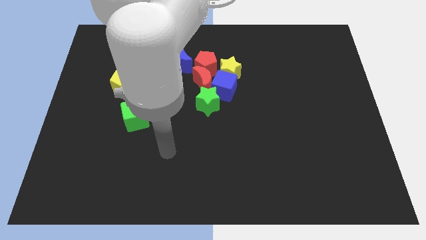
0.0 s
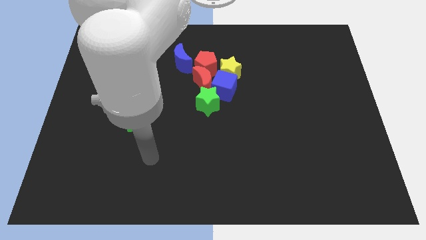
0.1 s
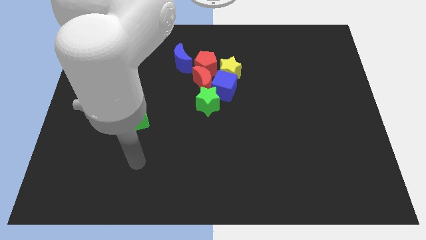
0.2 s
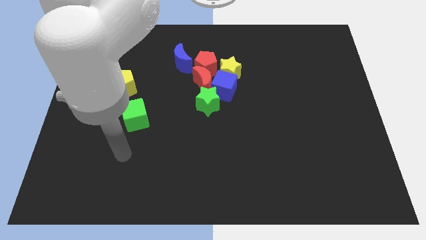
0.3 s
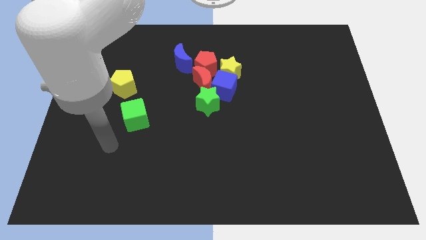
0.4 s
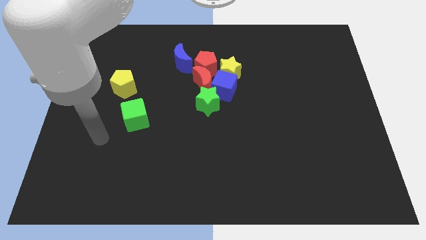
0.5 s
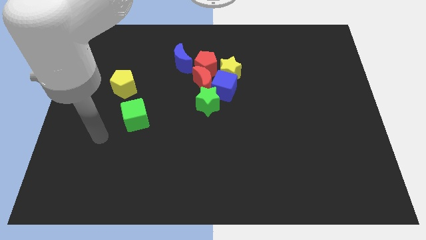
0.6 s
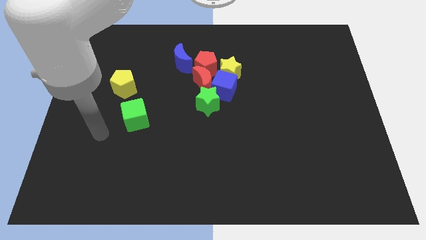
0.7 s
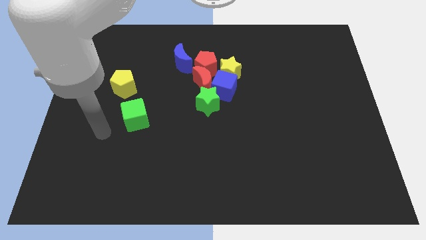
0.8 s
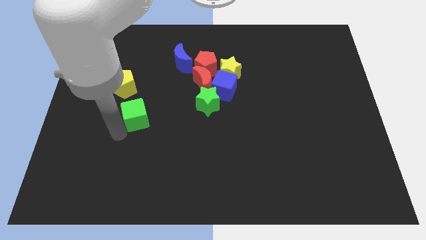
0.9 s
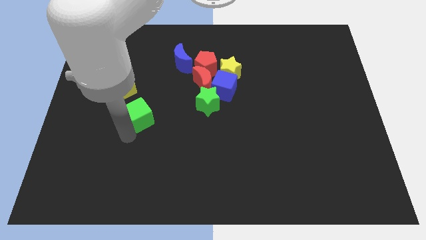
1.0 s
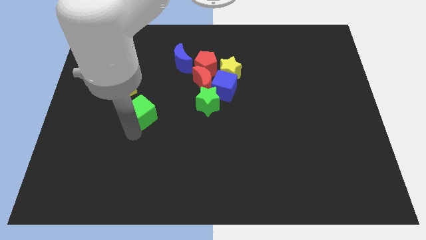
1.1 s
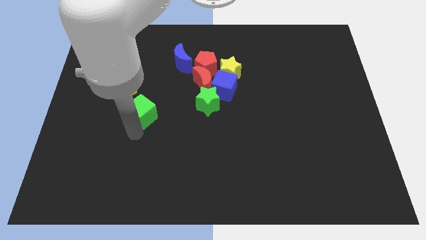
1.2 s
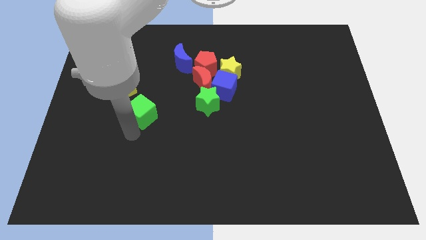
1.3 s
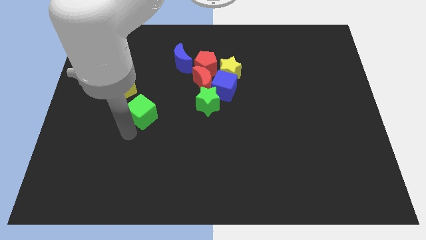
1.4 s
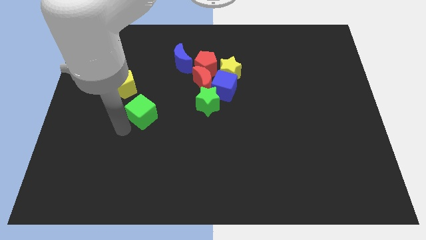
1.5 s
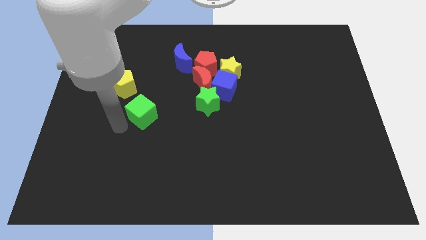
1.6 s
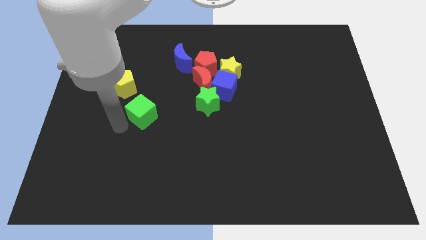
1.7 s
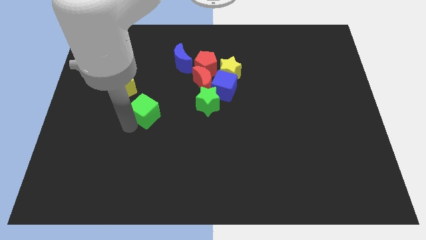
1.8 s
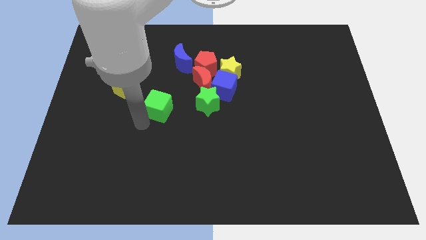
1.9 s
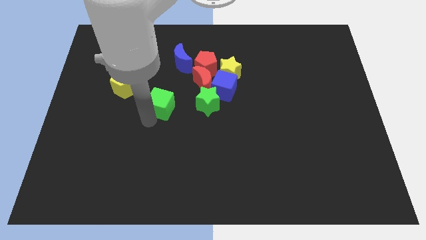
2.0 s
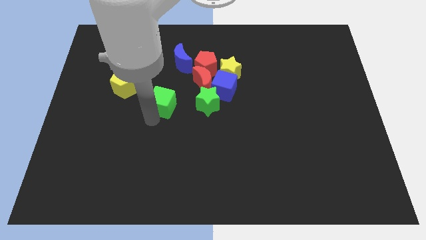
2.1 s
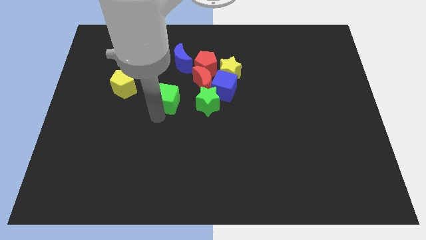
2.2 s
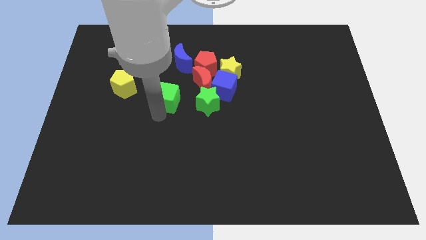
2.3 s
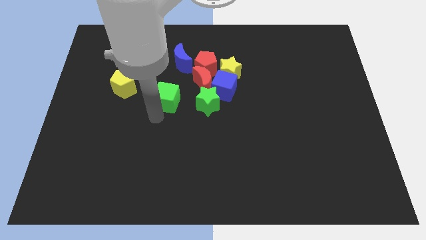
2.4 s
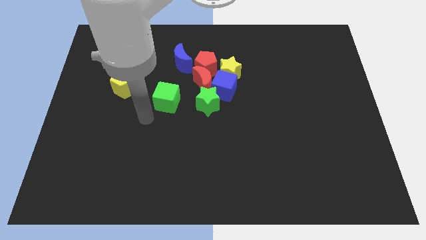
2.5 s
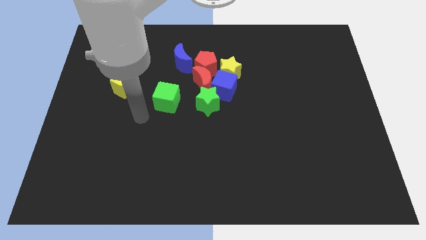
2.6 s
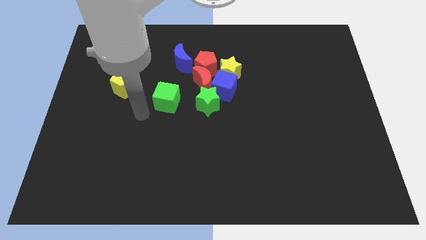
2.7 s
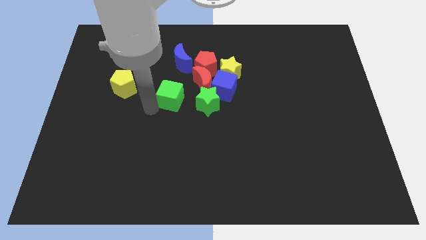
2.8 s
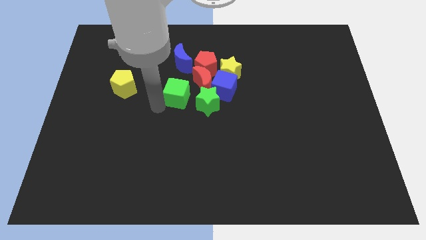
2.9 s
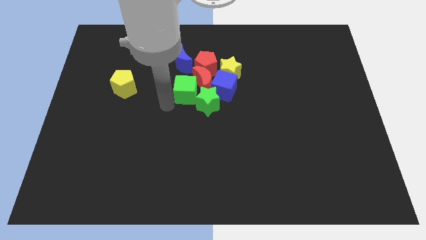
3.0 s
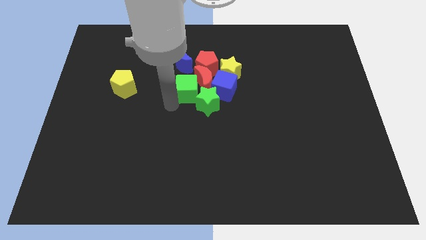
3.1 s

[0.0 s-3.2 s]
push green cube into group of blocks

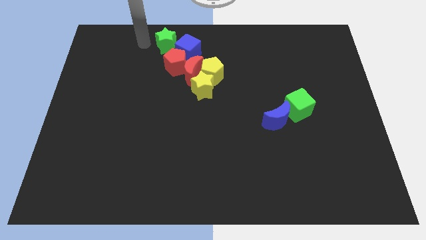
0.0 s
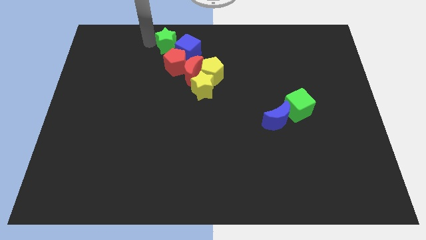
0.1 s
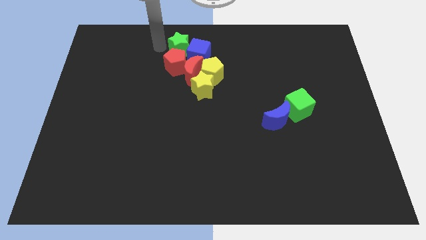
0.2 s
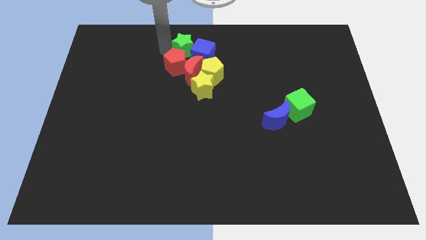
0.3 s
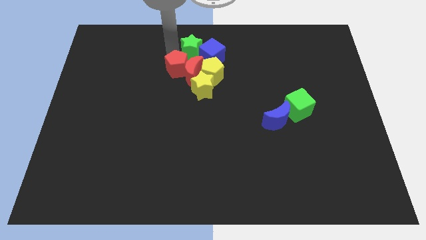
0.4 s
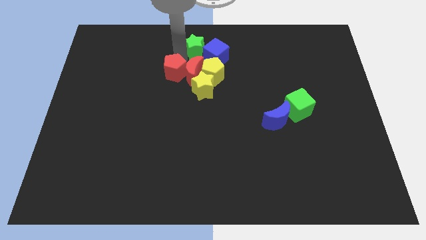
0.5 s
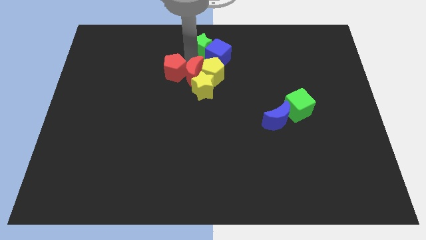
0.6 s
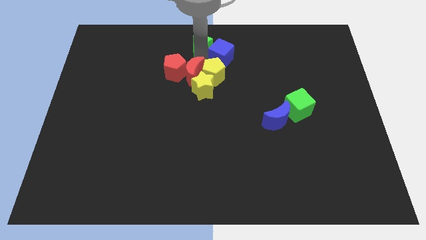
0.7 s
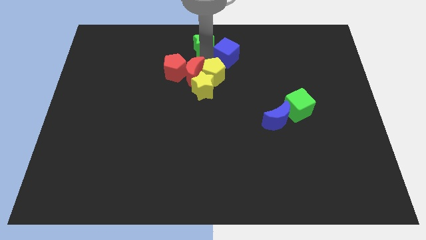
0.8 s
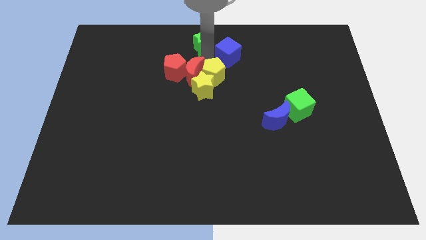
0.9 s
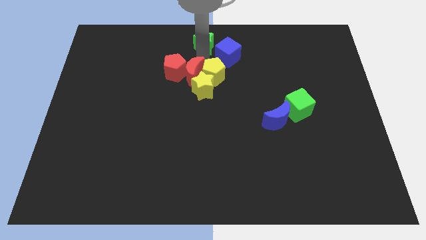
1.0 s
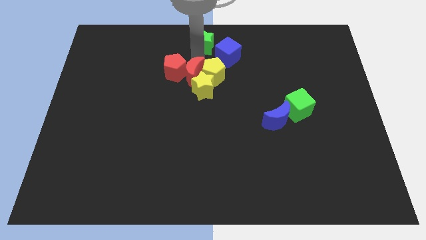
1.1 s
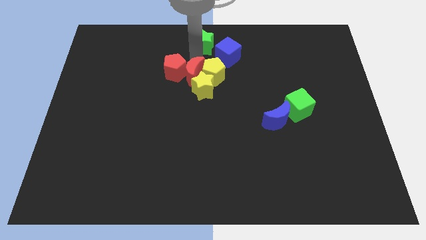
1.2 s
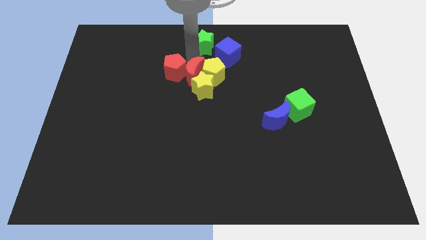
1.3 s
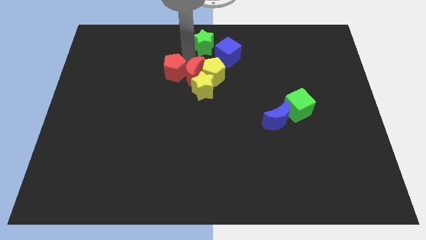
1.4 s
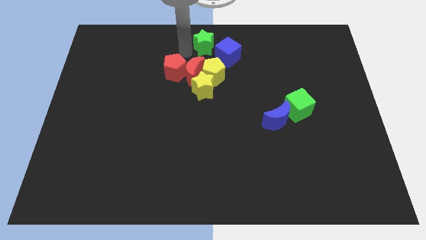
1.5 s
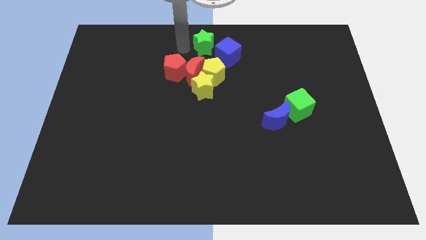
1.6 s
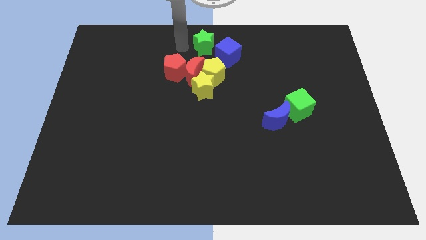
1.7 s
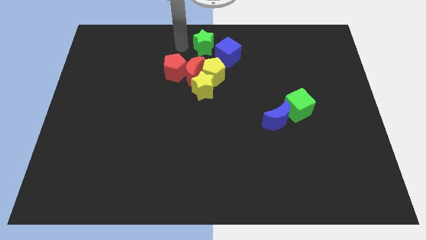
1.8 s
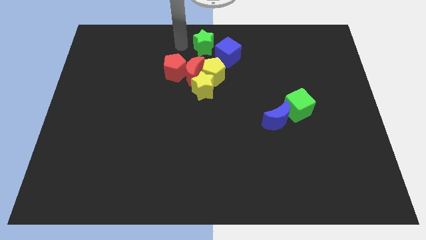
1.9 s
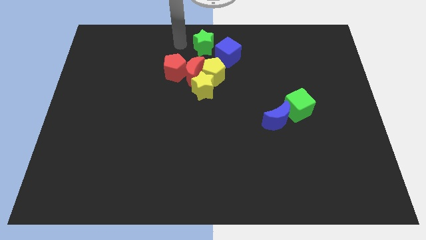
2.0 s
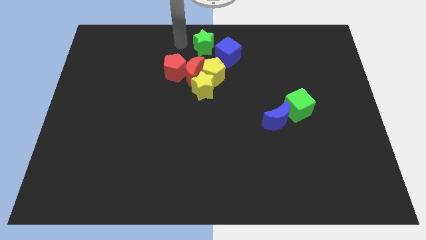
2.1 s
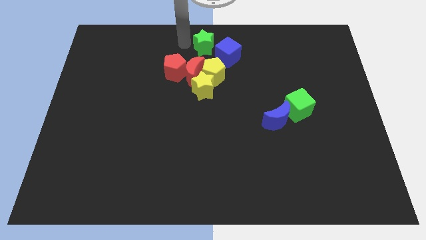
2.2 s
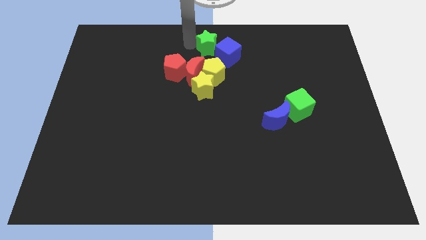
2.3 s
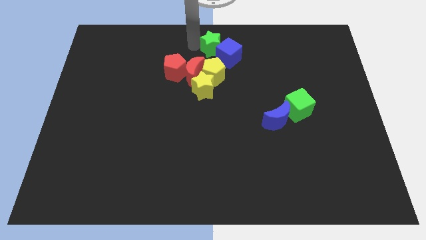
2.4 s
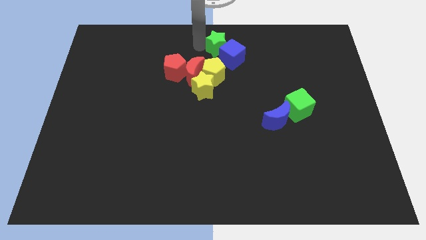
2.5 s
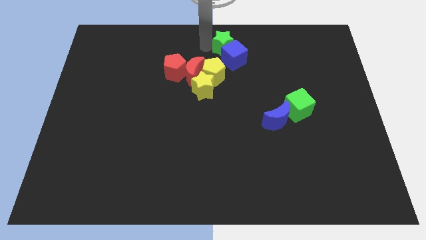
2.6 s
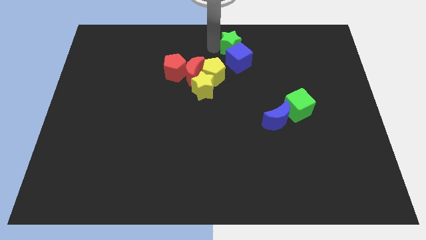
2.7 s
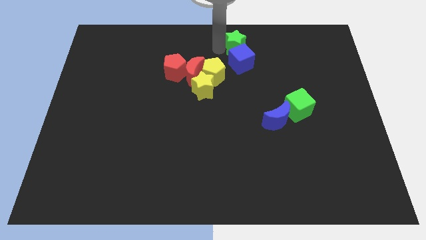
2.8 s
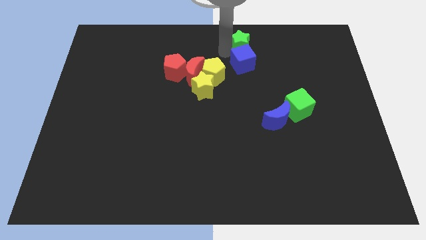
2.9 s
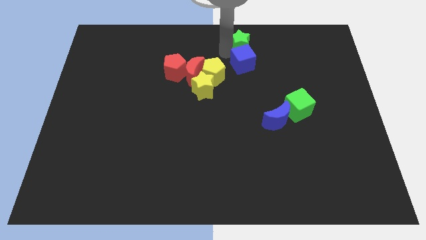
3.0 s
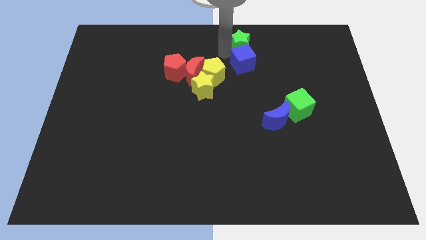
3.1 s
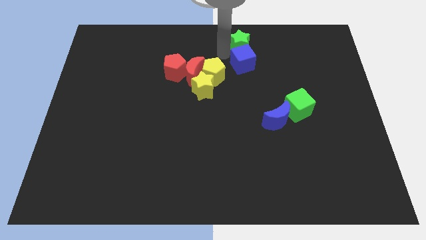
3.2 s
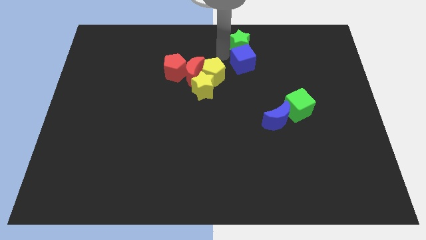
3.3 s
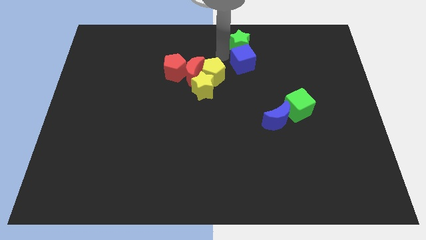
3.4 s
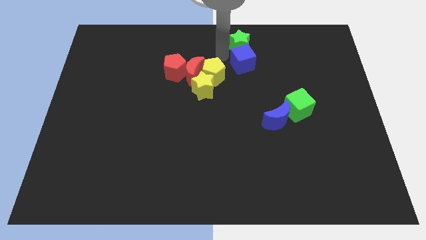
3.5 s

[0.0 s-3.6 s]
push the green star along with blue cube towards the right side of the board

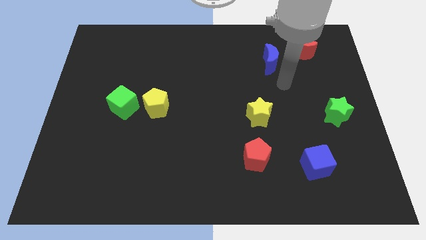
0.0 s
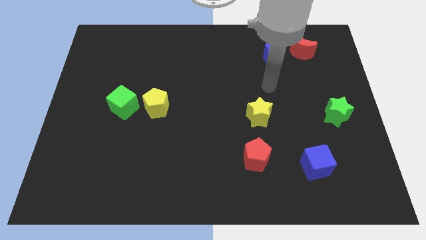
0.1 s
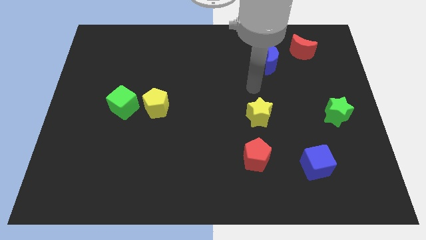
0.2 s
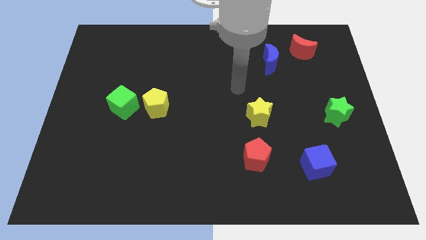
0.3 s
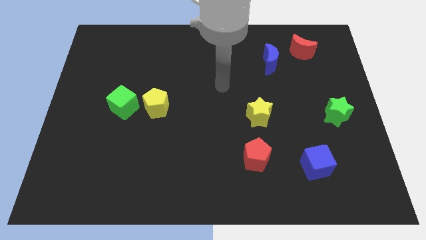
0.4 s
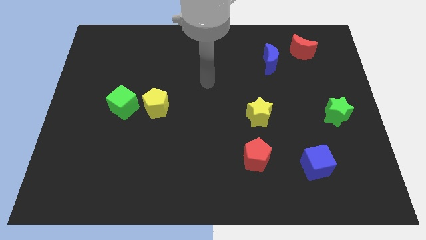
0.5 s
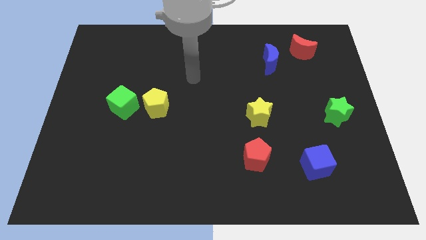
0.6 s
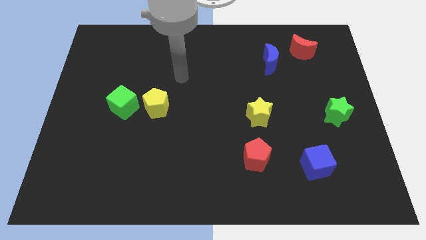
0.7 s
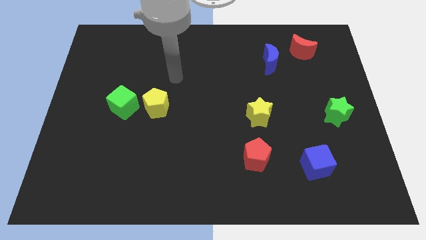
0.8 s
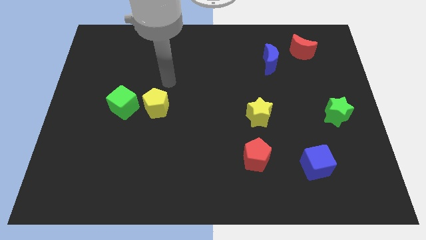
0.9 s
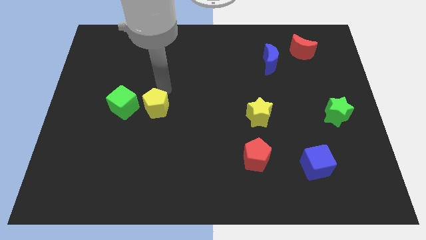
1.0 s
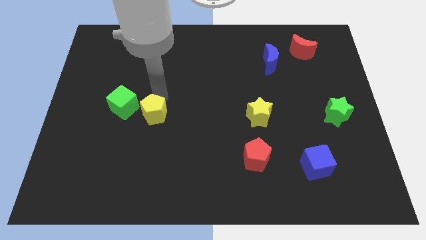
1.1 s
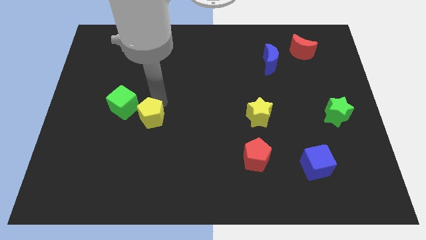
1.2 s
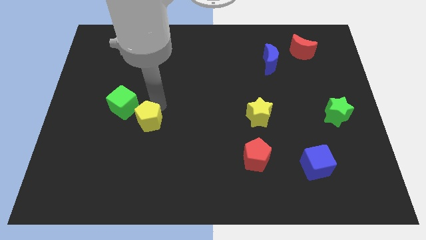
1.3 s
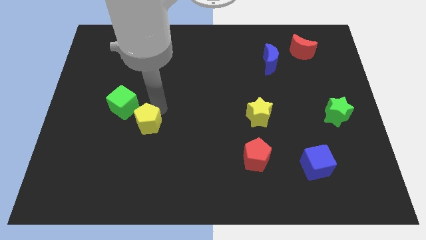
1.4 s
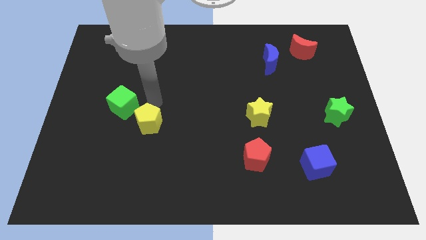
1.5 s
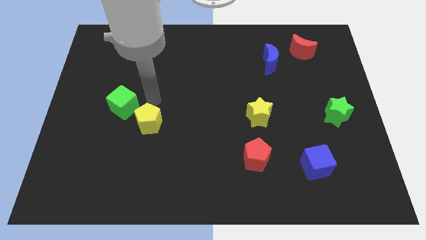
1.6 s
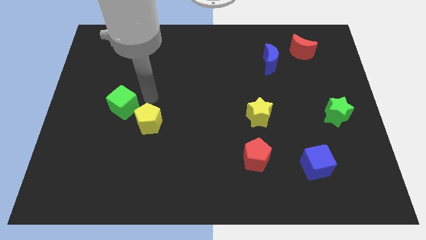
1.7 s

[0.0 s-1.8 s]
move the yellow pentagon slightly towards the bottom of the board

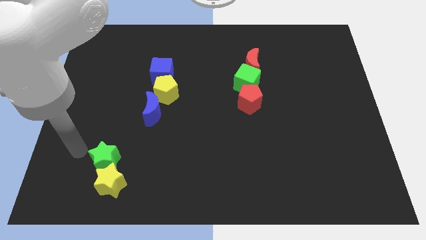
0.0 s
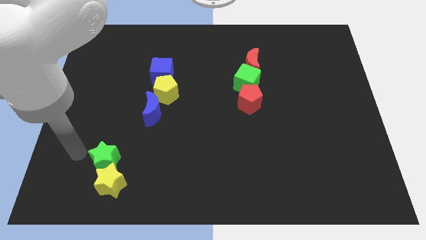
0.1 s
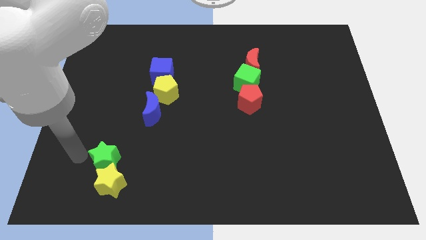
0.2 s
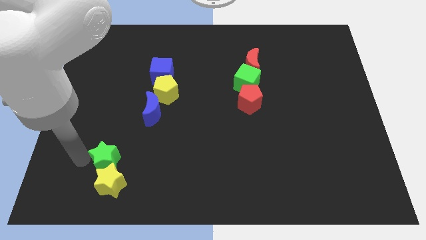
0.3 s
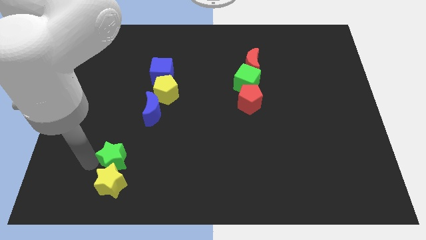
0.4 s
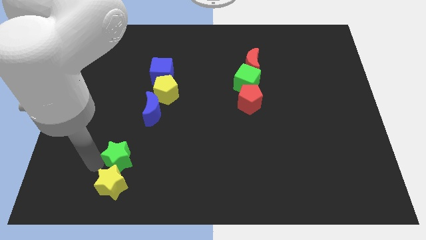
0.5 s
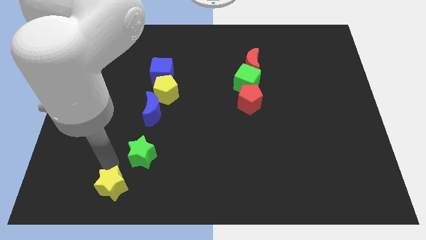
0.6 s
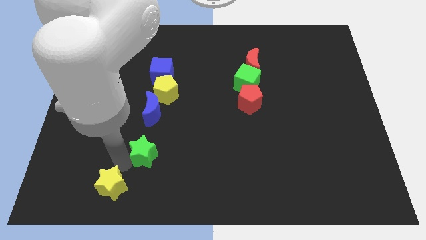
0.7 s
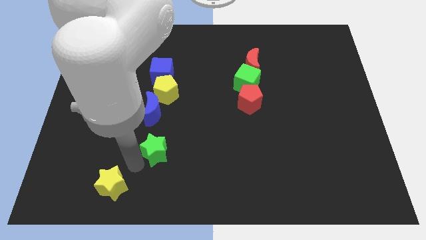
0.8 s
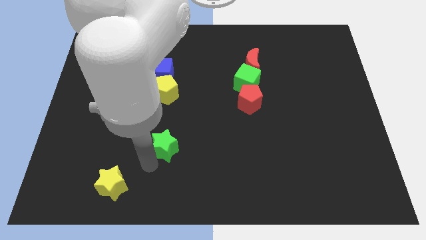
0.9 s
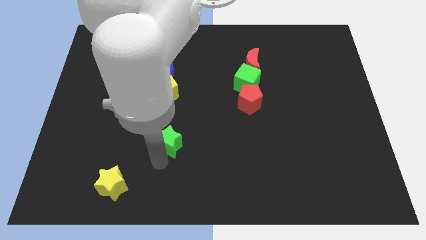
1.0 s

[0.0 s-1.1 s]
separate green star from yellow star
